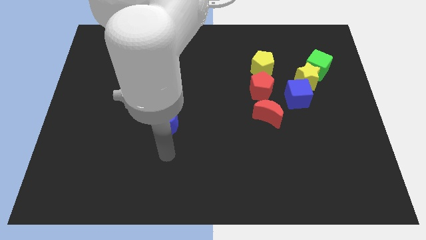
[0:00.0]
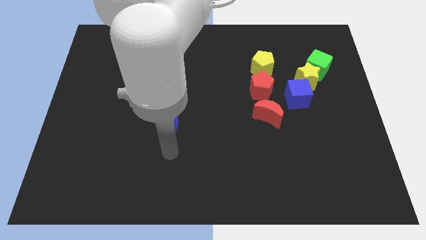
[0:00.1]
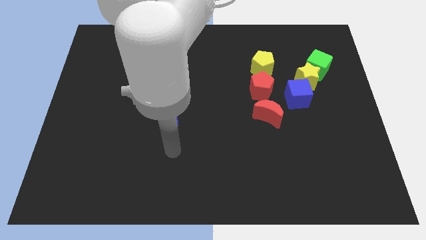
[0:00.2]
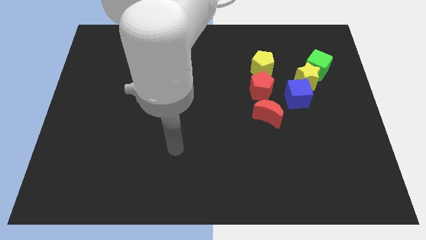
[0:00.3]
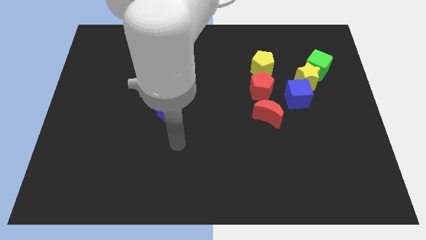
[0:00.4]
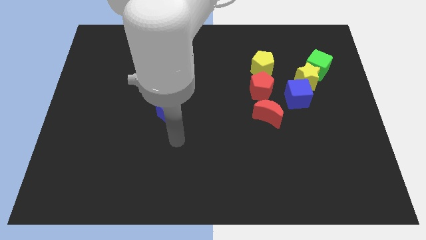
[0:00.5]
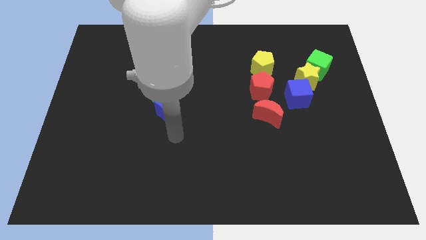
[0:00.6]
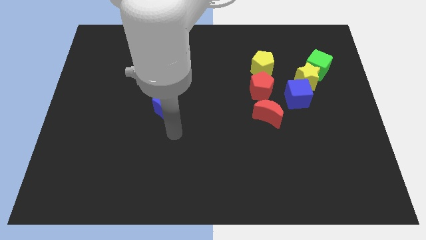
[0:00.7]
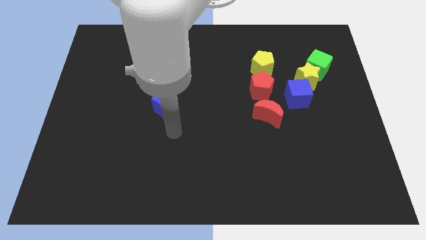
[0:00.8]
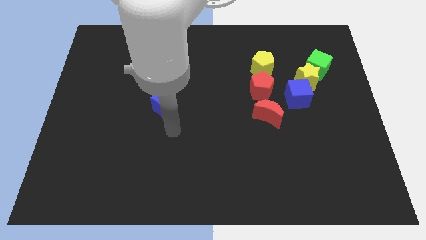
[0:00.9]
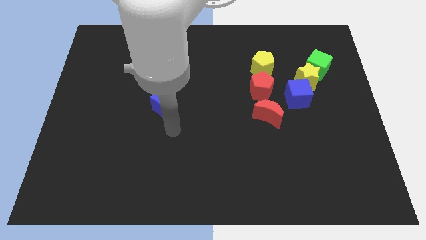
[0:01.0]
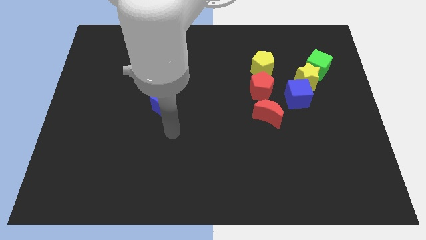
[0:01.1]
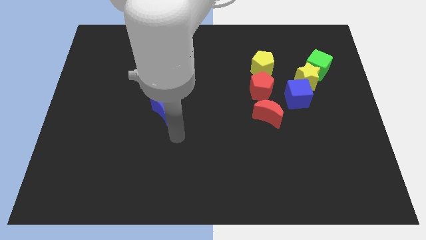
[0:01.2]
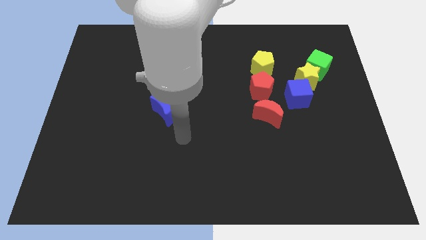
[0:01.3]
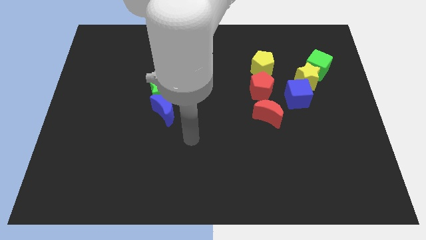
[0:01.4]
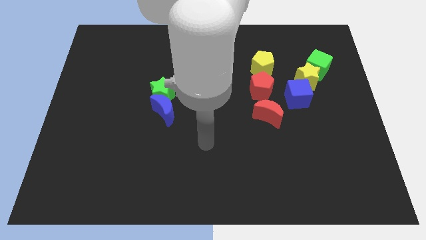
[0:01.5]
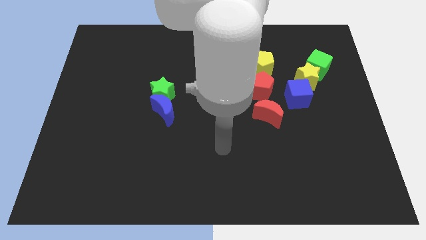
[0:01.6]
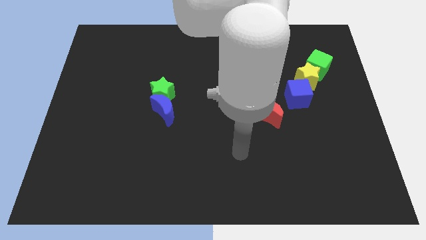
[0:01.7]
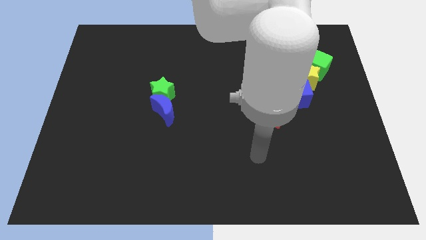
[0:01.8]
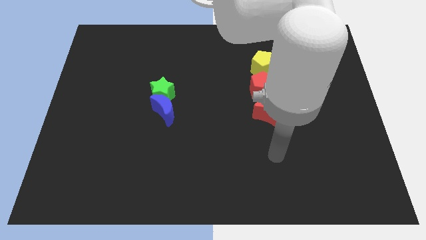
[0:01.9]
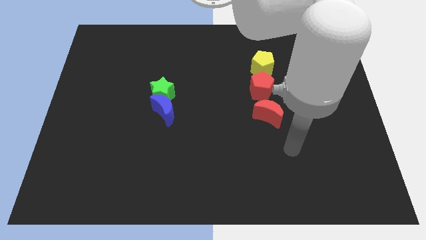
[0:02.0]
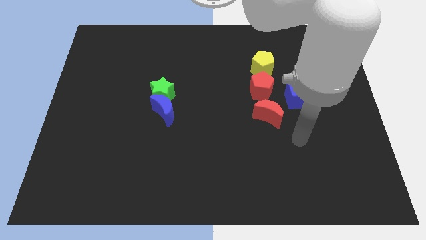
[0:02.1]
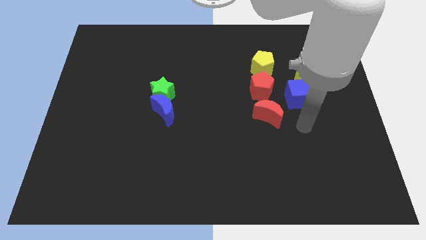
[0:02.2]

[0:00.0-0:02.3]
slightly push the blue moon and move away

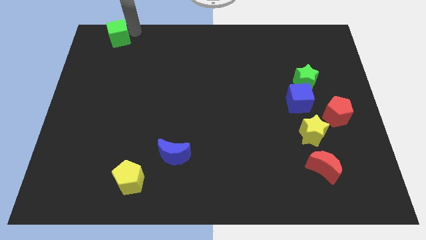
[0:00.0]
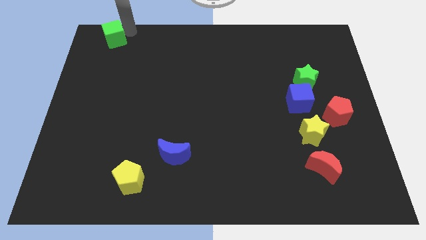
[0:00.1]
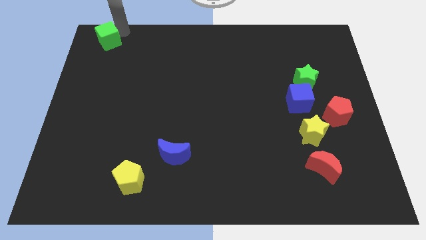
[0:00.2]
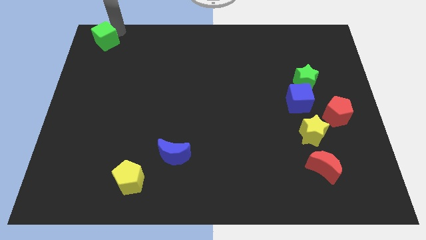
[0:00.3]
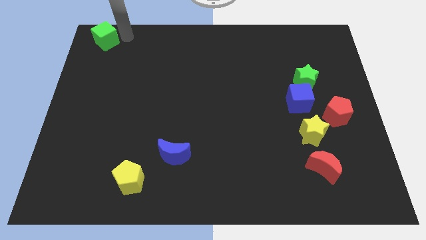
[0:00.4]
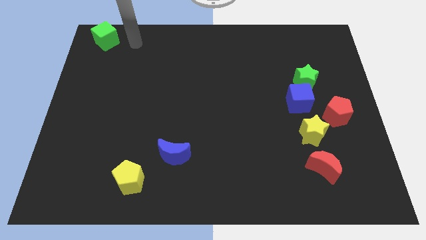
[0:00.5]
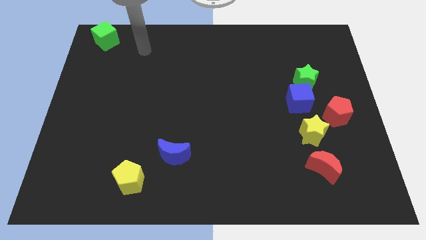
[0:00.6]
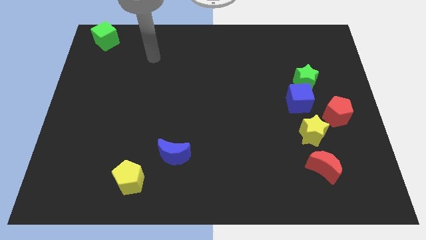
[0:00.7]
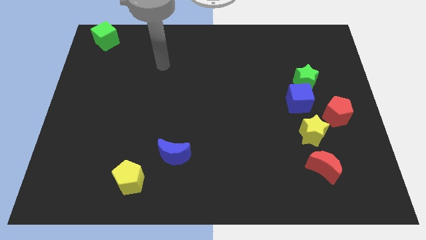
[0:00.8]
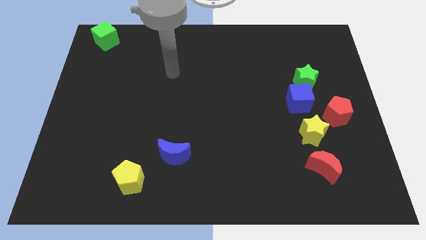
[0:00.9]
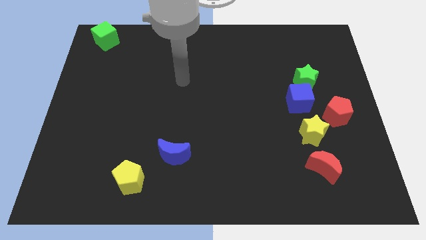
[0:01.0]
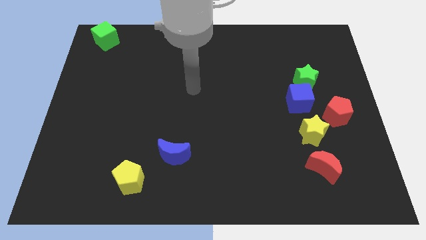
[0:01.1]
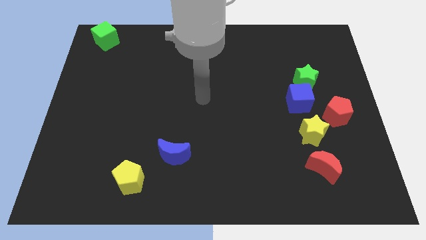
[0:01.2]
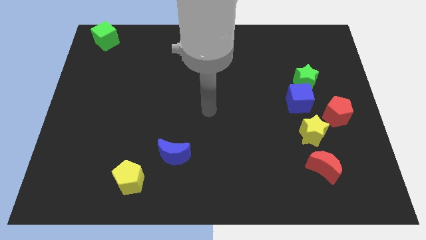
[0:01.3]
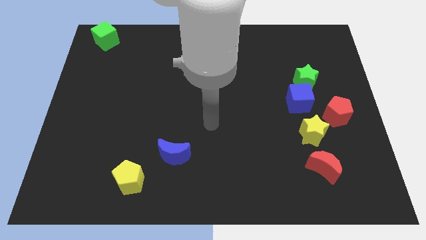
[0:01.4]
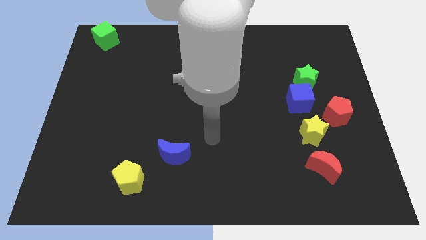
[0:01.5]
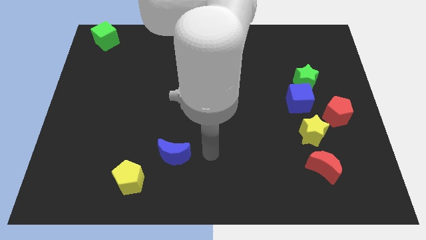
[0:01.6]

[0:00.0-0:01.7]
move the green cube to the left corner of the board

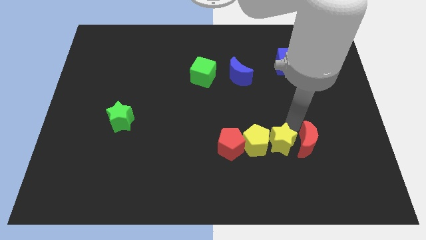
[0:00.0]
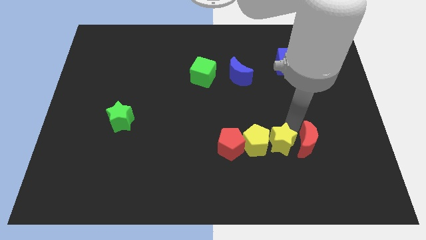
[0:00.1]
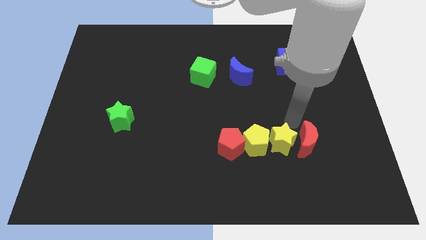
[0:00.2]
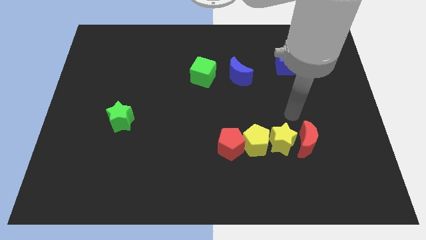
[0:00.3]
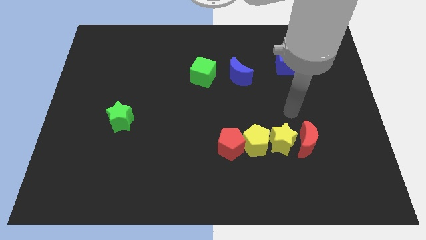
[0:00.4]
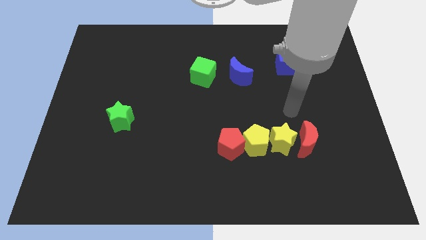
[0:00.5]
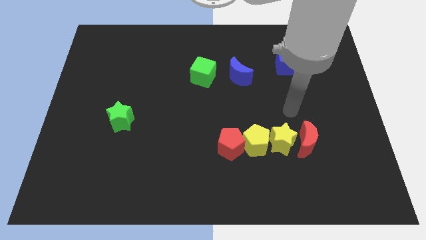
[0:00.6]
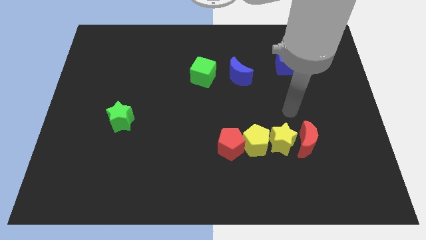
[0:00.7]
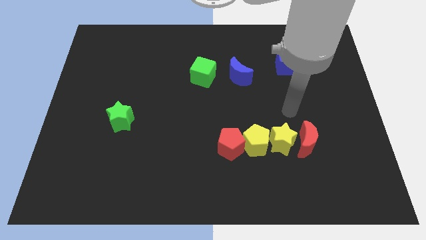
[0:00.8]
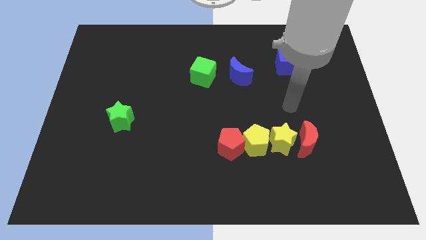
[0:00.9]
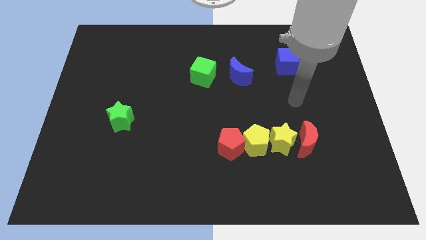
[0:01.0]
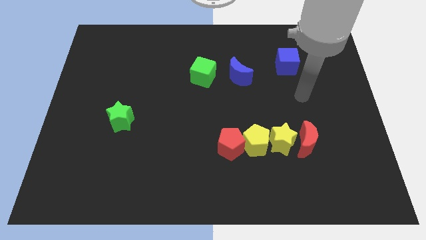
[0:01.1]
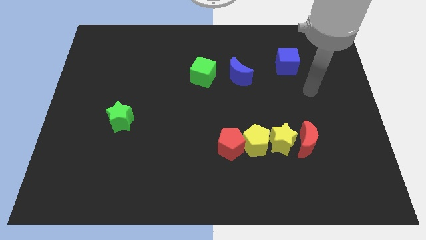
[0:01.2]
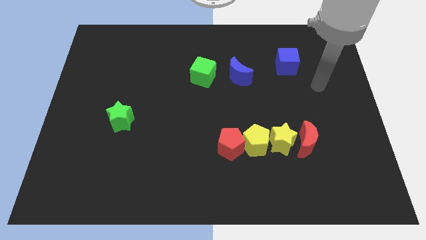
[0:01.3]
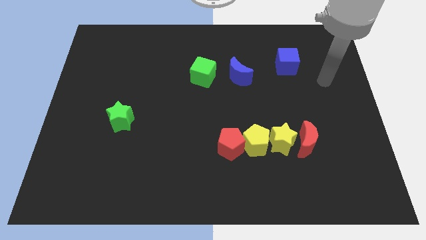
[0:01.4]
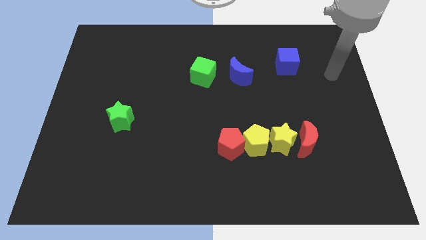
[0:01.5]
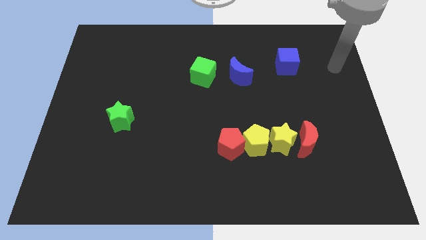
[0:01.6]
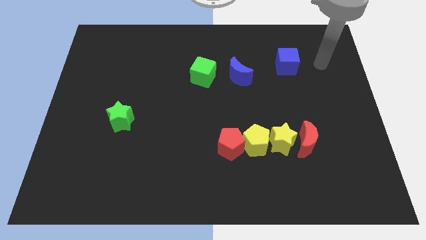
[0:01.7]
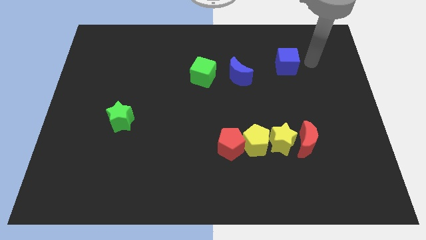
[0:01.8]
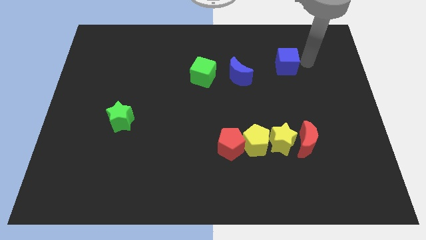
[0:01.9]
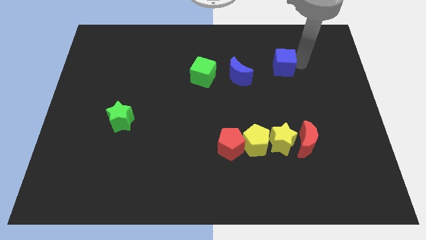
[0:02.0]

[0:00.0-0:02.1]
place the arm right to the blue cube

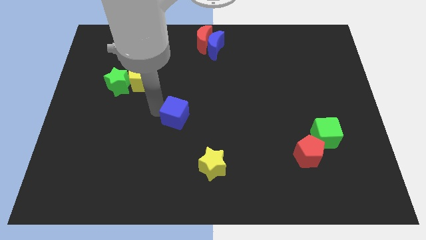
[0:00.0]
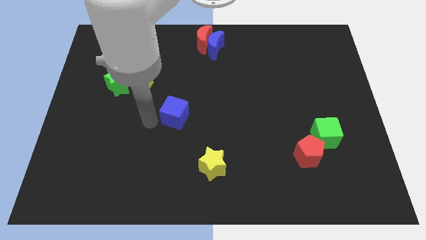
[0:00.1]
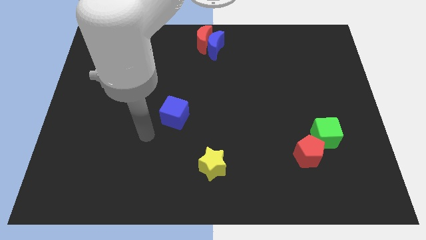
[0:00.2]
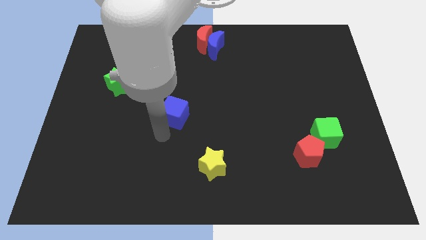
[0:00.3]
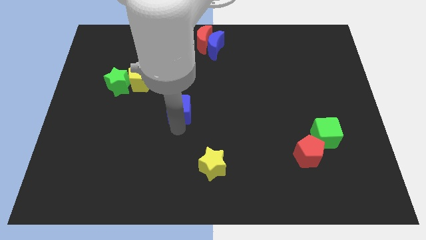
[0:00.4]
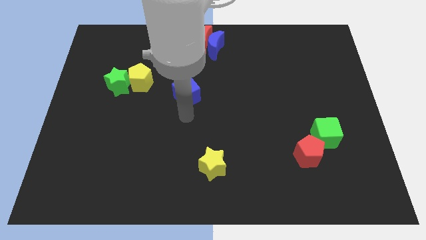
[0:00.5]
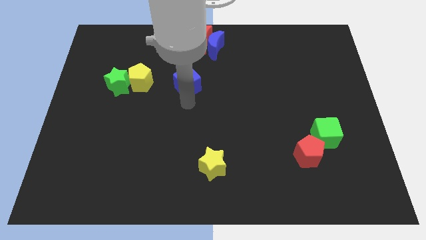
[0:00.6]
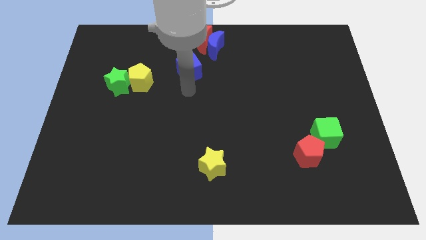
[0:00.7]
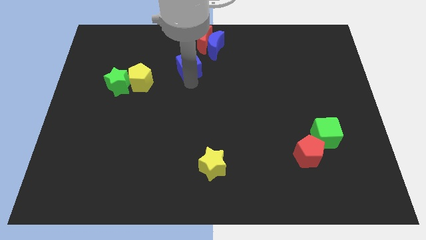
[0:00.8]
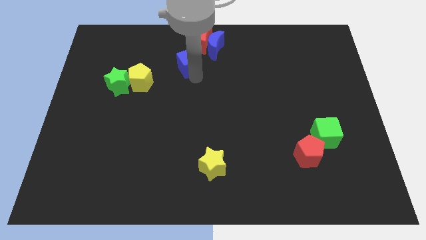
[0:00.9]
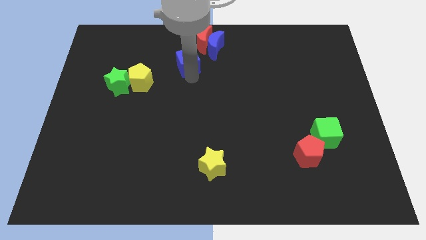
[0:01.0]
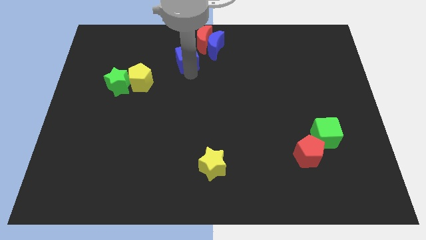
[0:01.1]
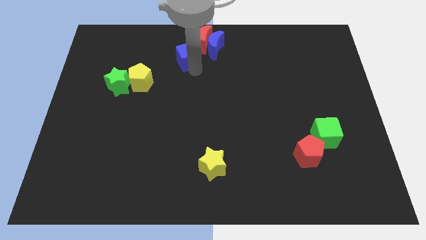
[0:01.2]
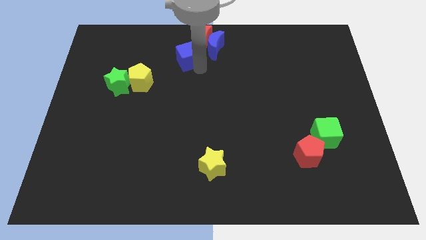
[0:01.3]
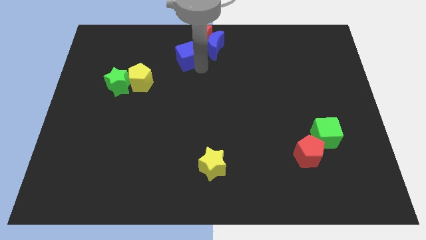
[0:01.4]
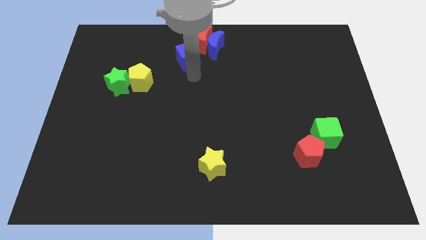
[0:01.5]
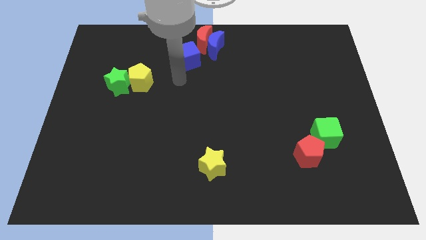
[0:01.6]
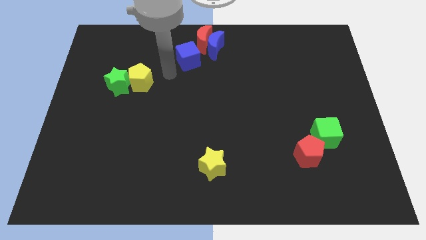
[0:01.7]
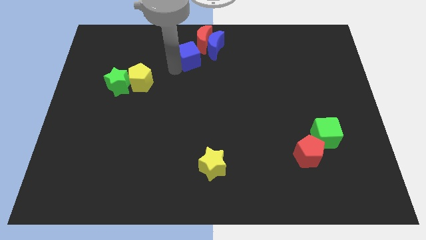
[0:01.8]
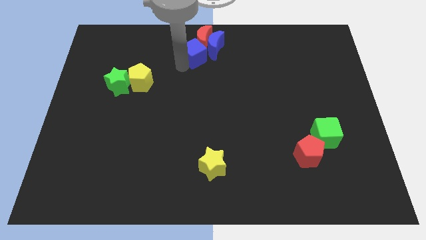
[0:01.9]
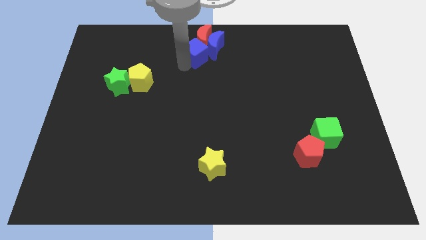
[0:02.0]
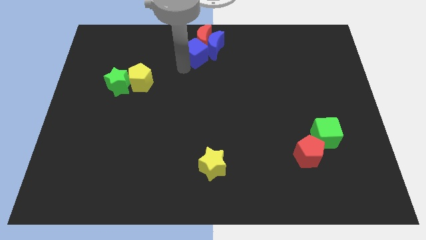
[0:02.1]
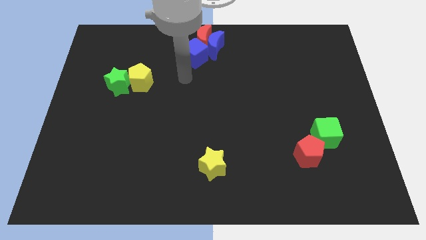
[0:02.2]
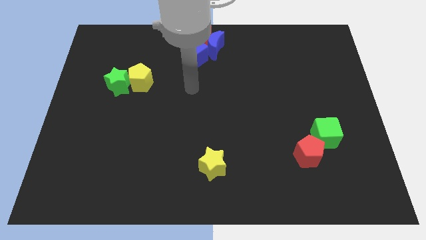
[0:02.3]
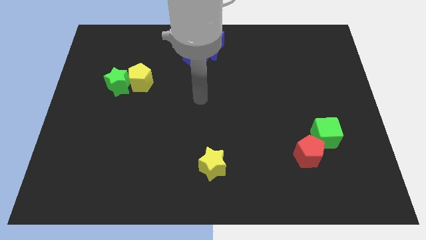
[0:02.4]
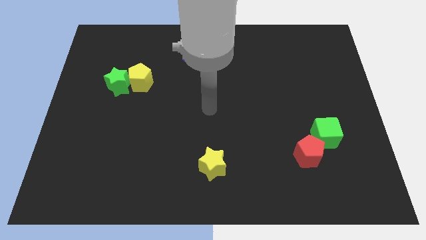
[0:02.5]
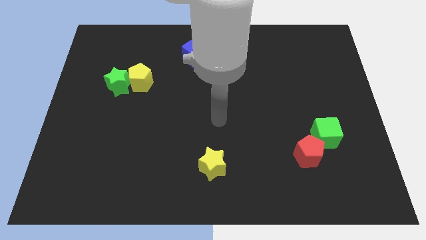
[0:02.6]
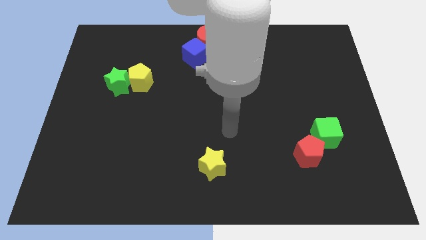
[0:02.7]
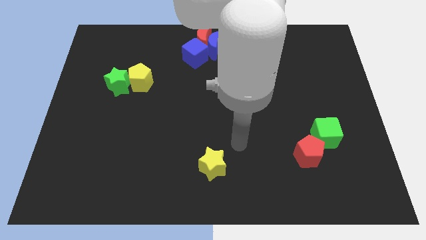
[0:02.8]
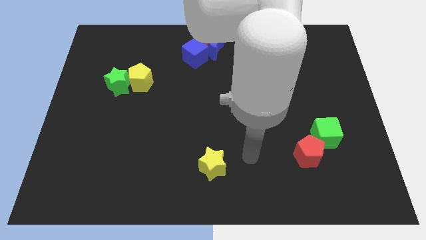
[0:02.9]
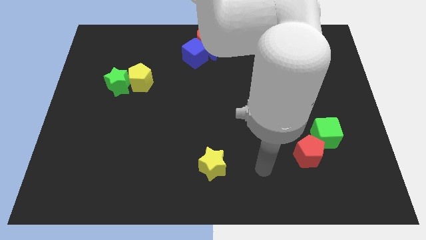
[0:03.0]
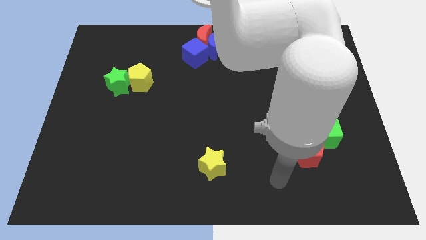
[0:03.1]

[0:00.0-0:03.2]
push the blue cube into the red crescent from the bottom
